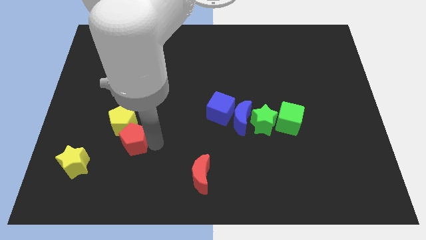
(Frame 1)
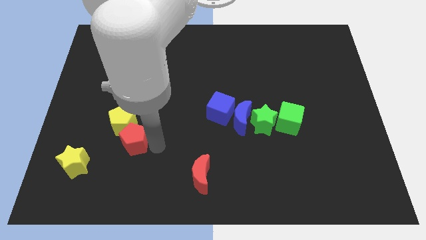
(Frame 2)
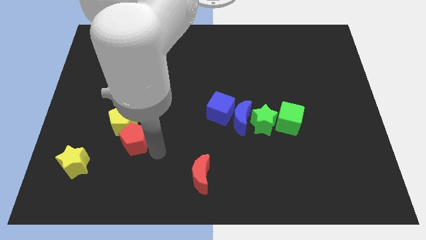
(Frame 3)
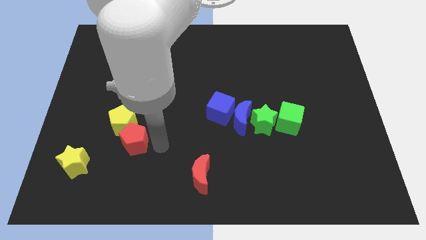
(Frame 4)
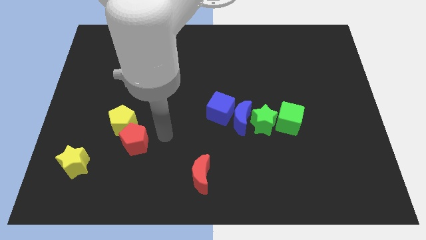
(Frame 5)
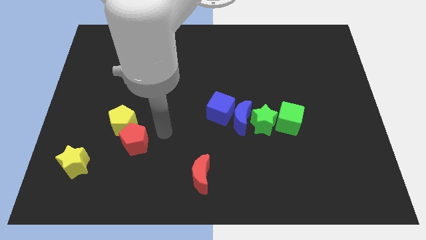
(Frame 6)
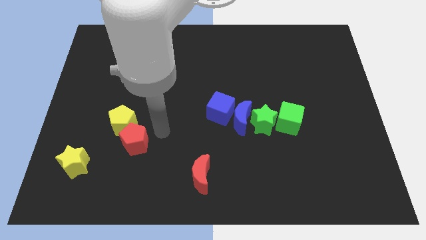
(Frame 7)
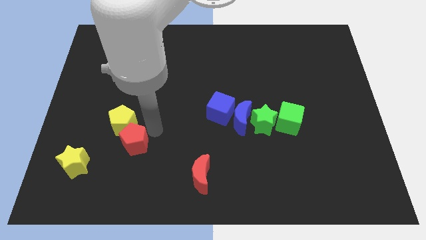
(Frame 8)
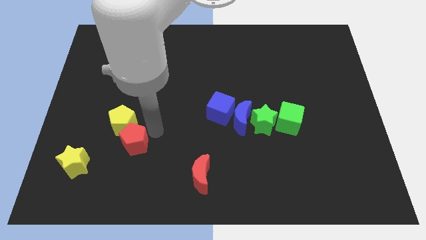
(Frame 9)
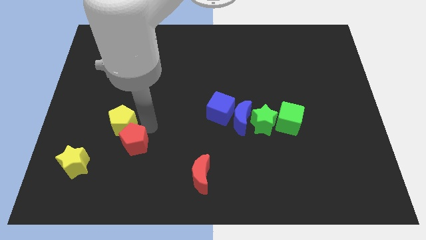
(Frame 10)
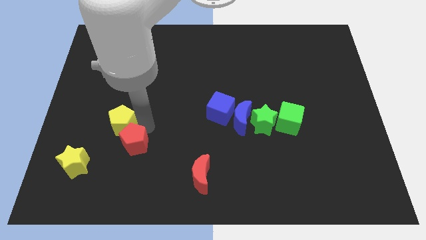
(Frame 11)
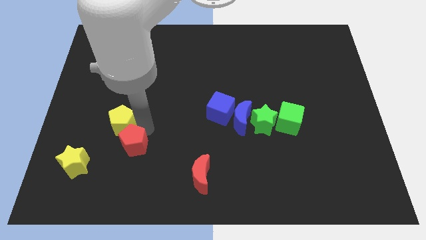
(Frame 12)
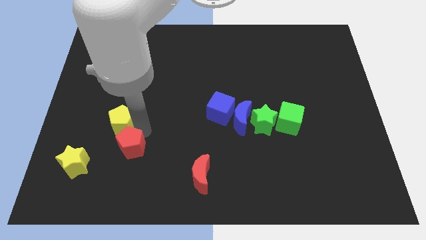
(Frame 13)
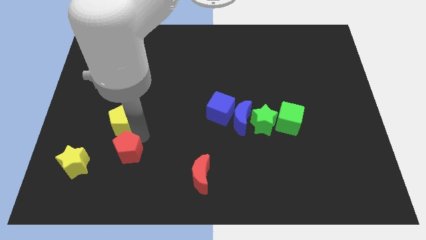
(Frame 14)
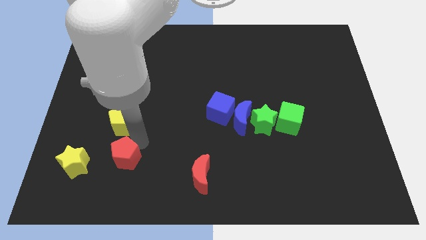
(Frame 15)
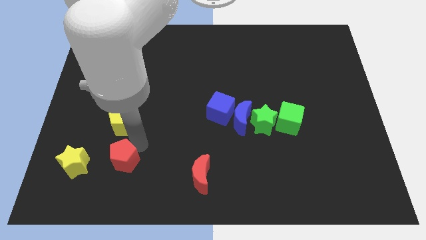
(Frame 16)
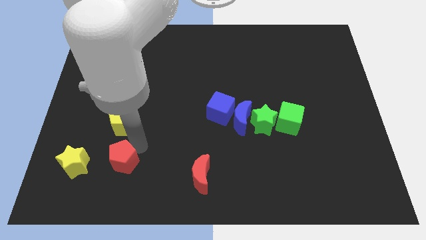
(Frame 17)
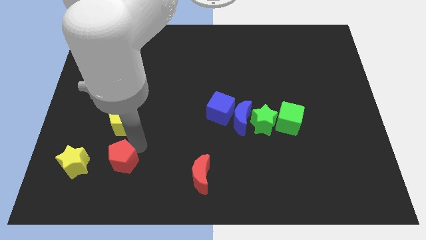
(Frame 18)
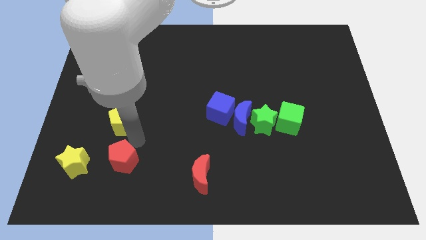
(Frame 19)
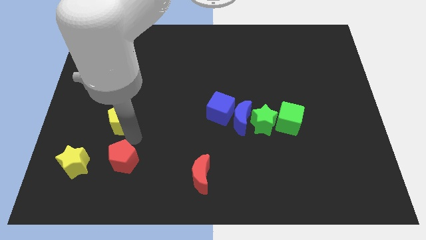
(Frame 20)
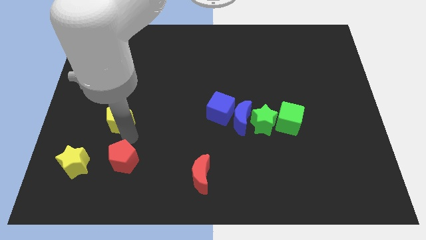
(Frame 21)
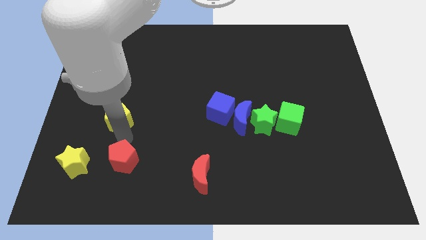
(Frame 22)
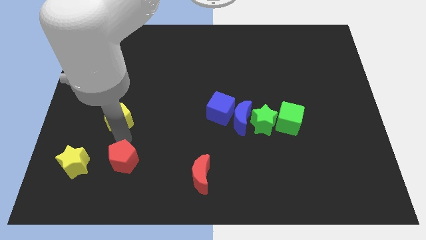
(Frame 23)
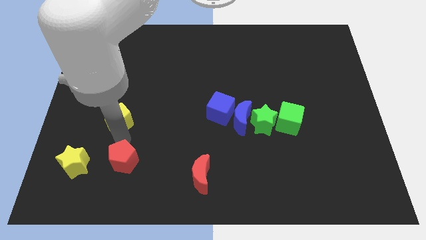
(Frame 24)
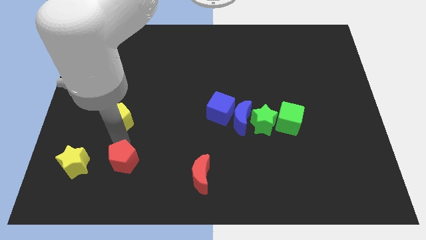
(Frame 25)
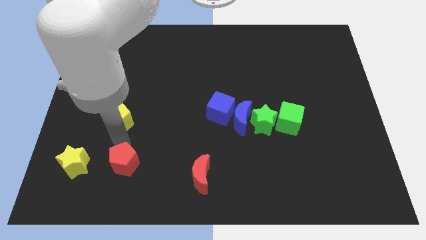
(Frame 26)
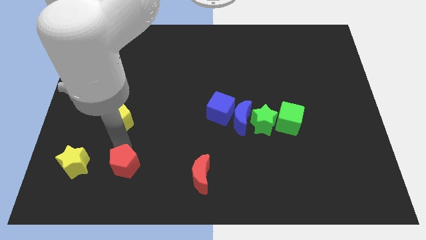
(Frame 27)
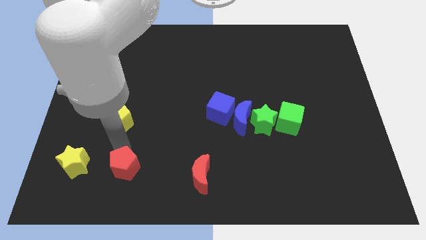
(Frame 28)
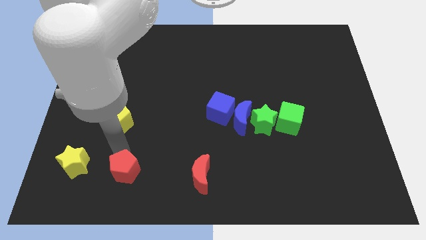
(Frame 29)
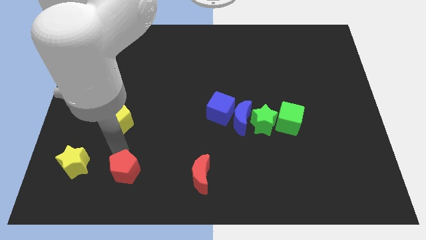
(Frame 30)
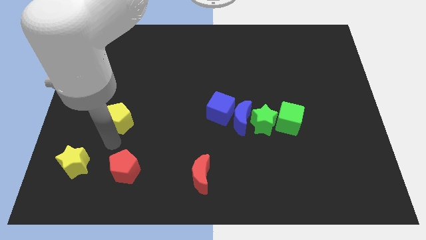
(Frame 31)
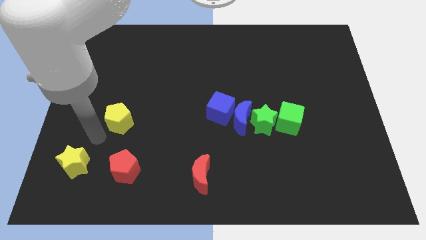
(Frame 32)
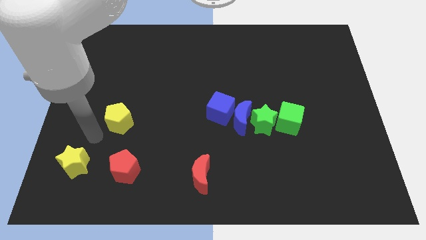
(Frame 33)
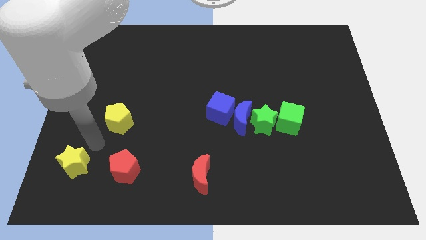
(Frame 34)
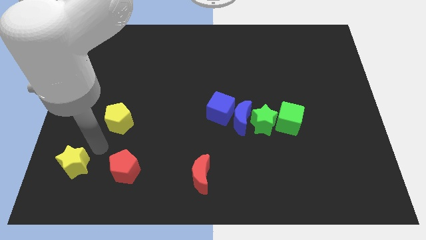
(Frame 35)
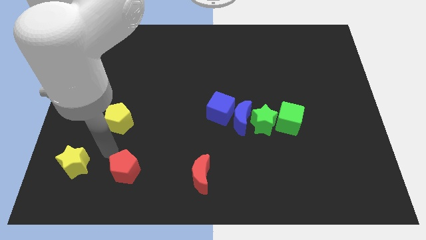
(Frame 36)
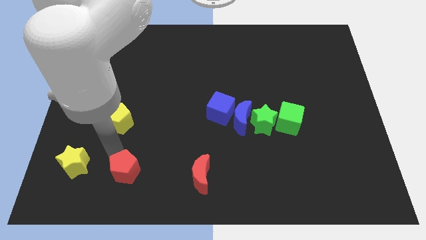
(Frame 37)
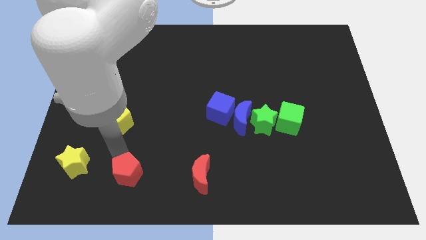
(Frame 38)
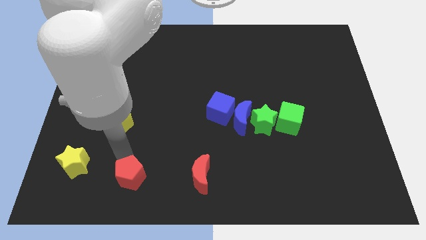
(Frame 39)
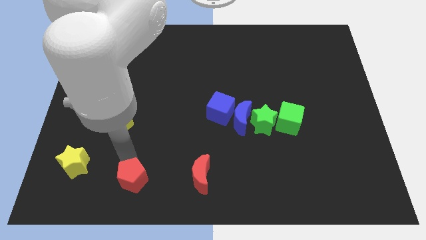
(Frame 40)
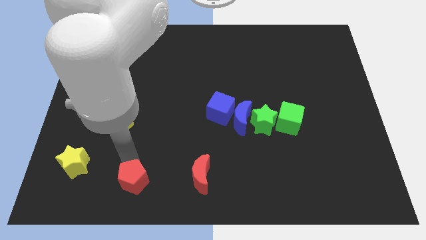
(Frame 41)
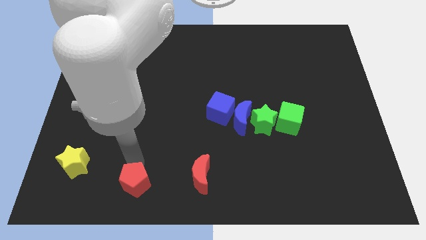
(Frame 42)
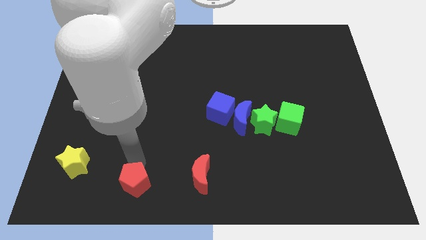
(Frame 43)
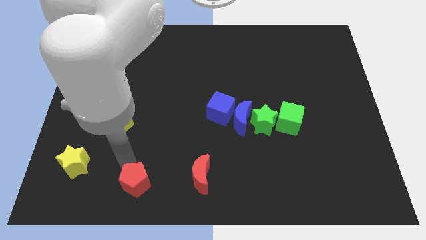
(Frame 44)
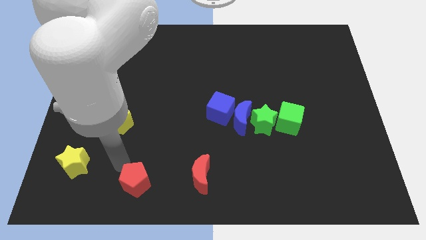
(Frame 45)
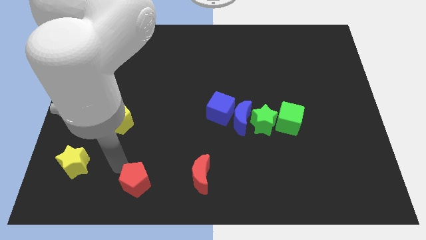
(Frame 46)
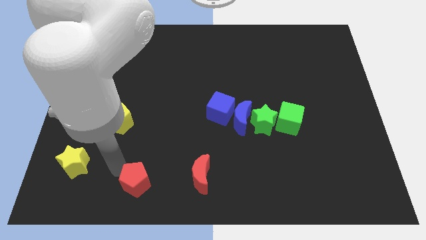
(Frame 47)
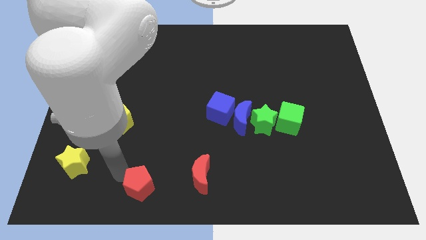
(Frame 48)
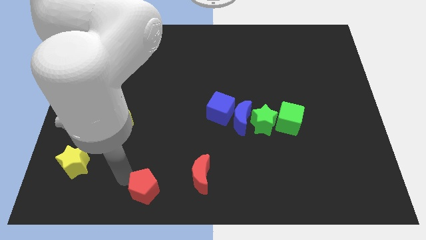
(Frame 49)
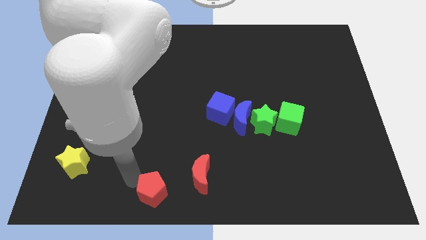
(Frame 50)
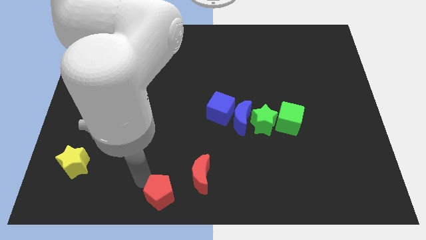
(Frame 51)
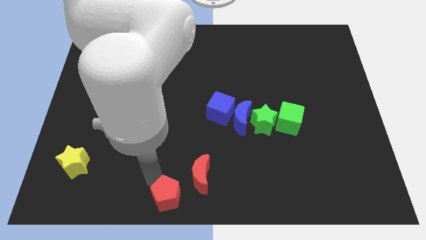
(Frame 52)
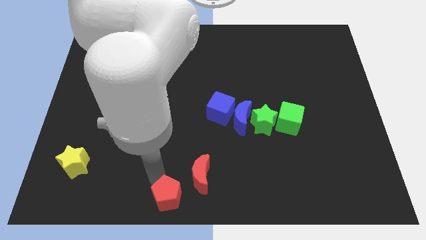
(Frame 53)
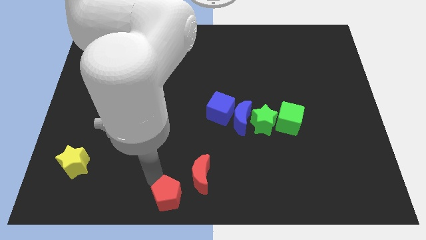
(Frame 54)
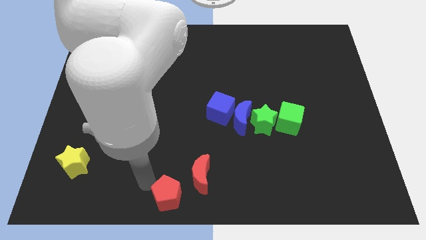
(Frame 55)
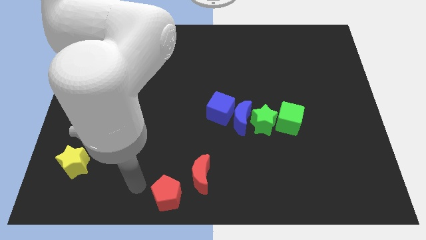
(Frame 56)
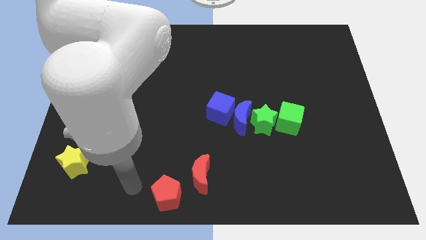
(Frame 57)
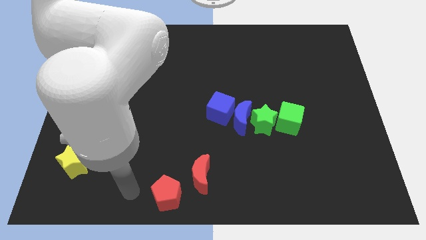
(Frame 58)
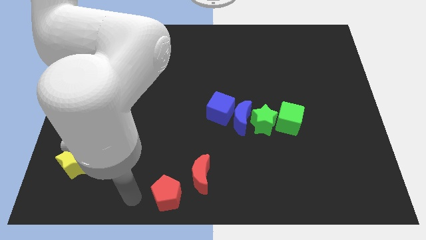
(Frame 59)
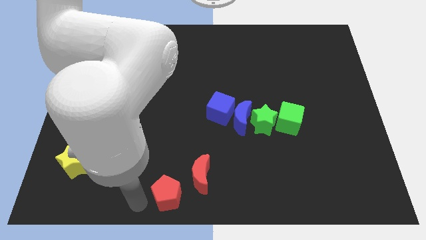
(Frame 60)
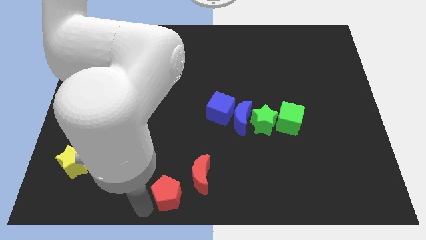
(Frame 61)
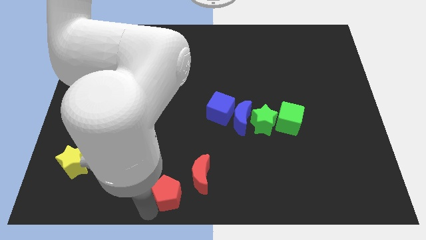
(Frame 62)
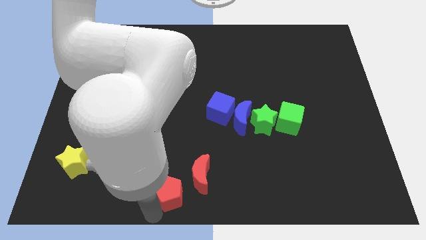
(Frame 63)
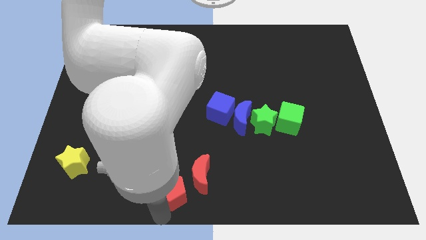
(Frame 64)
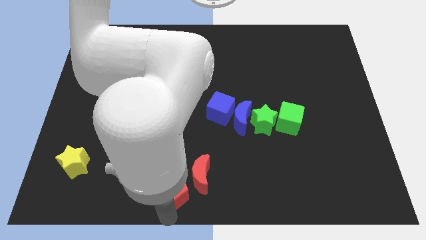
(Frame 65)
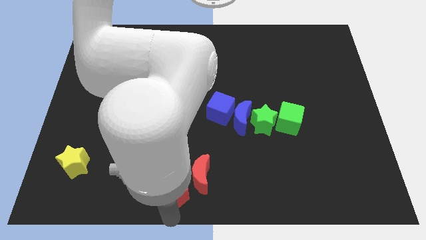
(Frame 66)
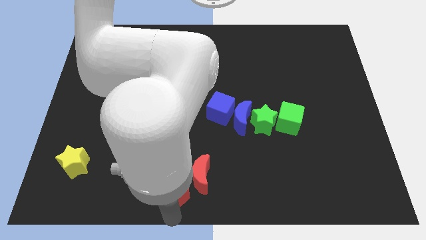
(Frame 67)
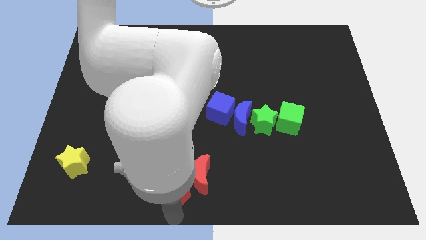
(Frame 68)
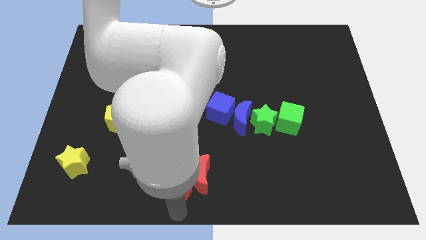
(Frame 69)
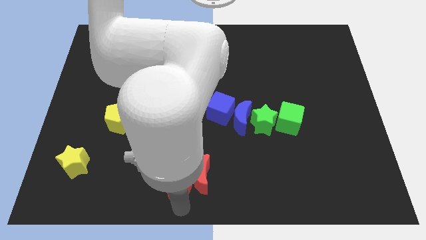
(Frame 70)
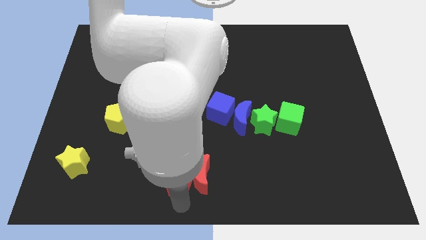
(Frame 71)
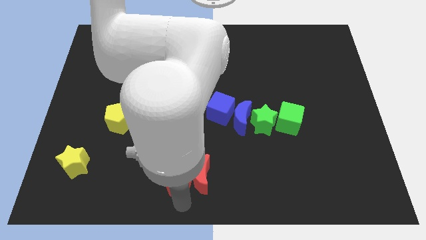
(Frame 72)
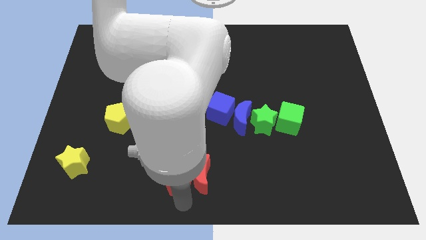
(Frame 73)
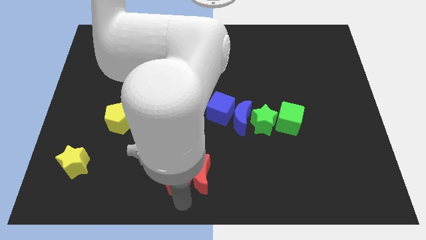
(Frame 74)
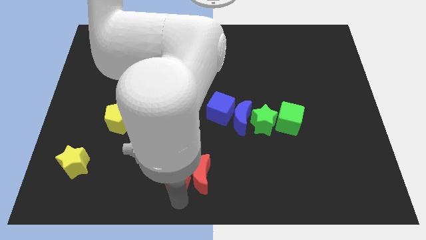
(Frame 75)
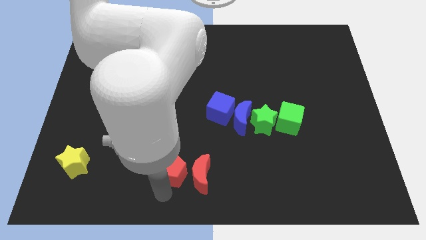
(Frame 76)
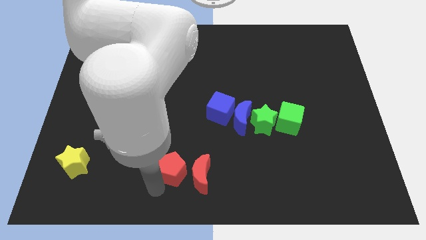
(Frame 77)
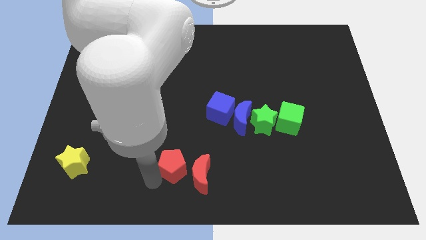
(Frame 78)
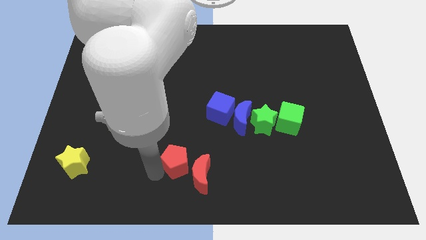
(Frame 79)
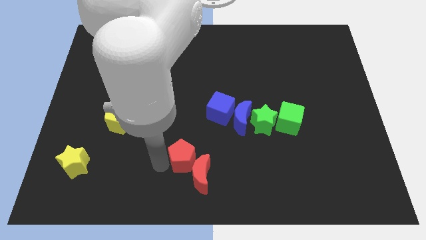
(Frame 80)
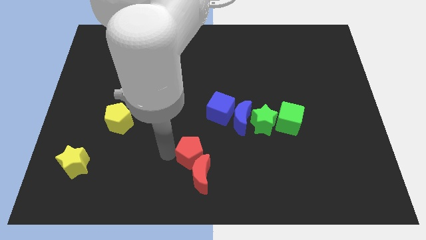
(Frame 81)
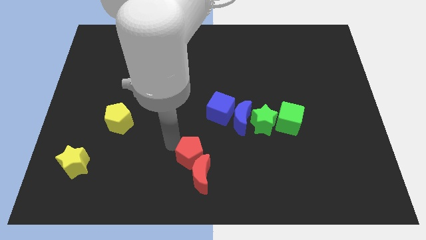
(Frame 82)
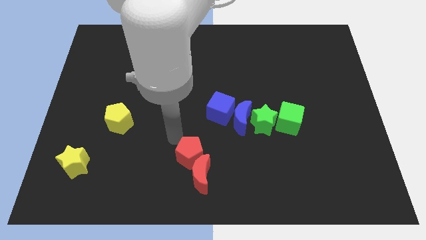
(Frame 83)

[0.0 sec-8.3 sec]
place the red pentagon to the top left side of the red moon

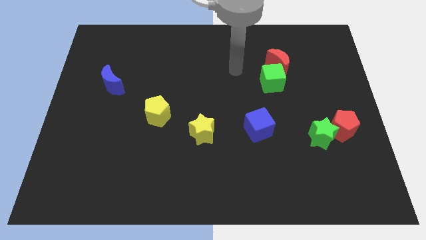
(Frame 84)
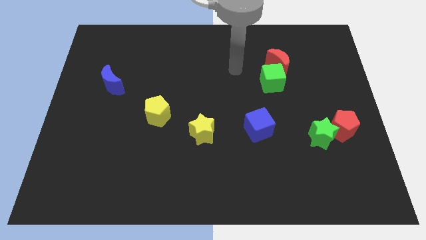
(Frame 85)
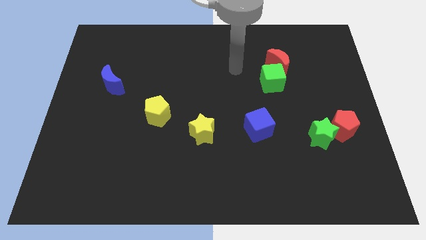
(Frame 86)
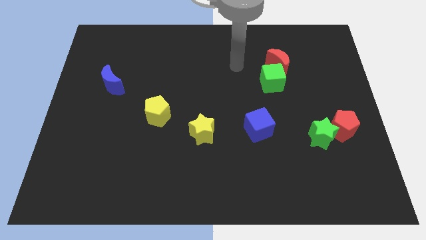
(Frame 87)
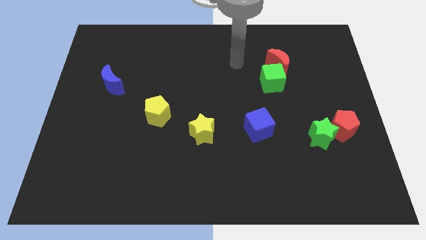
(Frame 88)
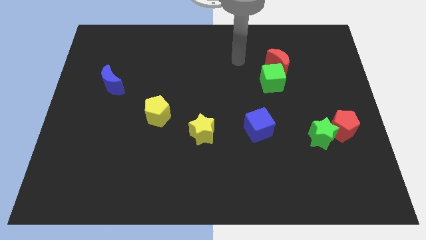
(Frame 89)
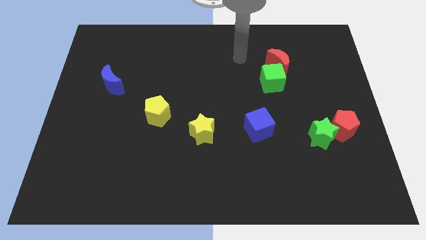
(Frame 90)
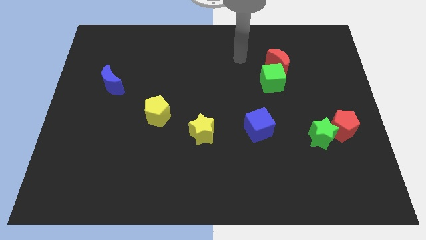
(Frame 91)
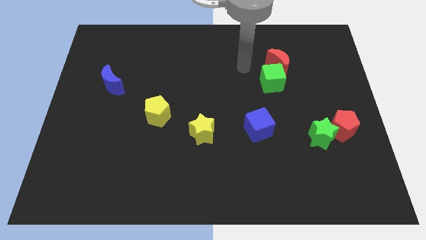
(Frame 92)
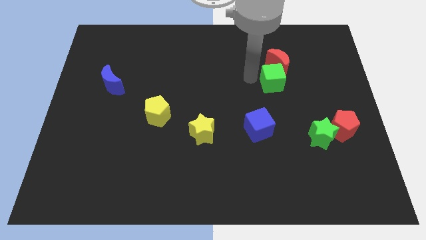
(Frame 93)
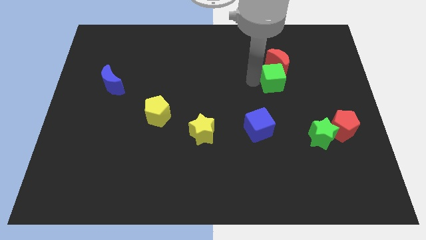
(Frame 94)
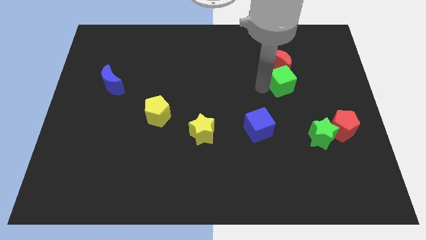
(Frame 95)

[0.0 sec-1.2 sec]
touch the green cube with your arm
